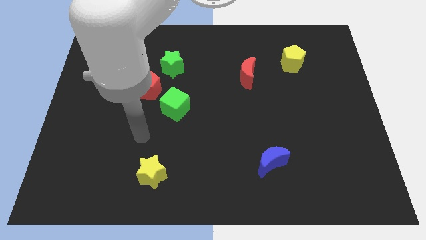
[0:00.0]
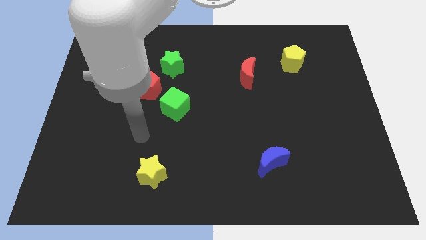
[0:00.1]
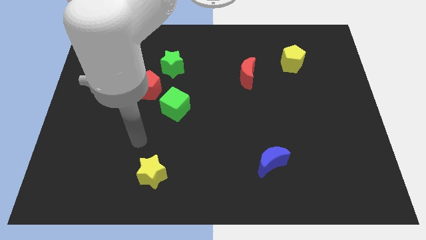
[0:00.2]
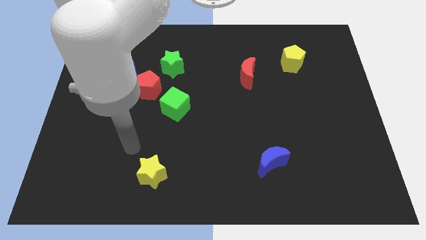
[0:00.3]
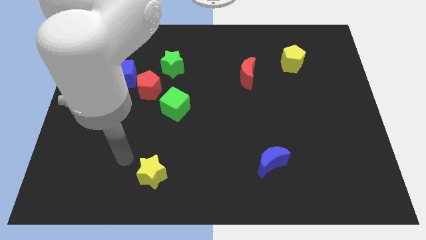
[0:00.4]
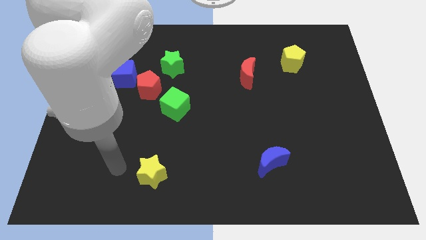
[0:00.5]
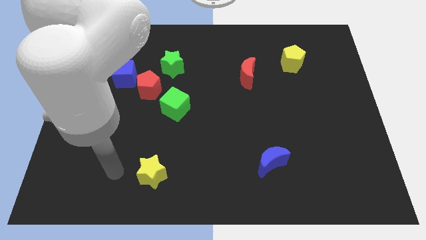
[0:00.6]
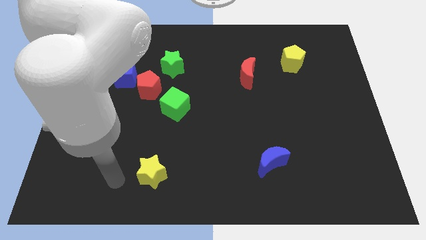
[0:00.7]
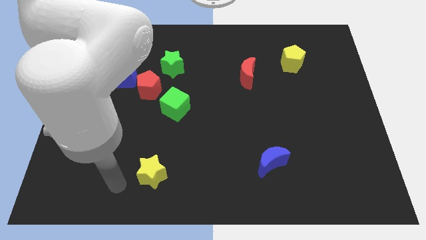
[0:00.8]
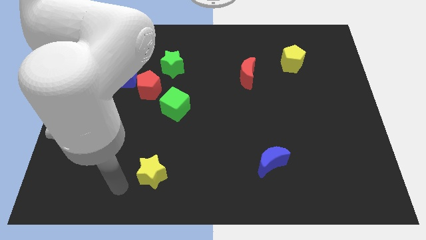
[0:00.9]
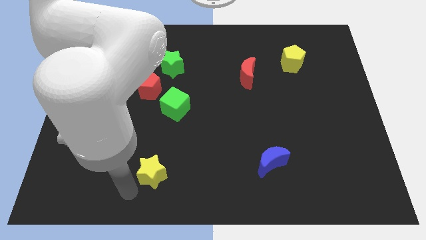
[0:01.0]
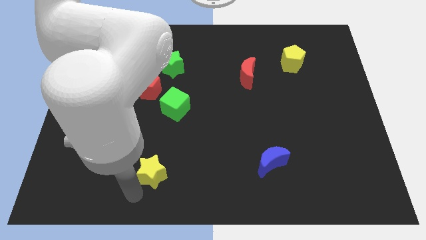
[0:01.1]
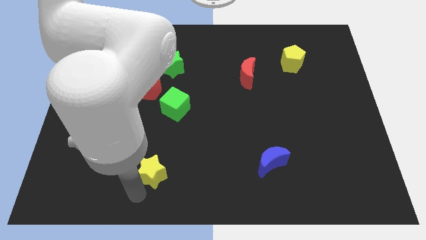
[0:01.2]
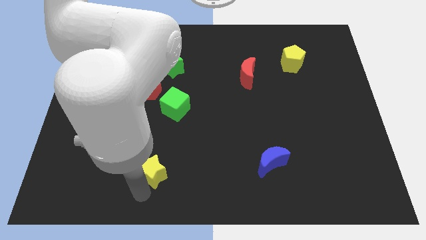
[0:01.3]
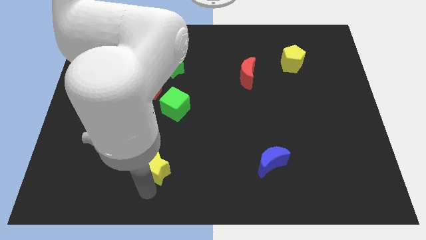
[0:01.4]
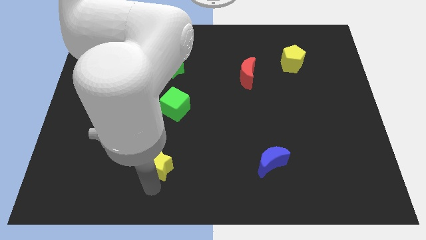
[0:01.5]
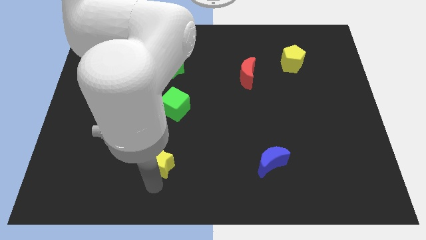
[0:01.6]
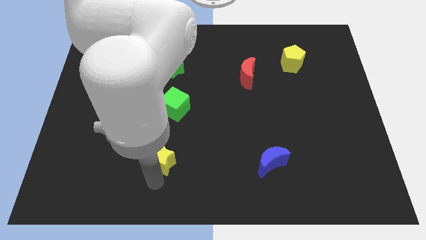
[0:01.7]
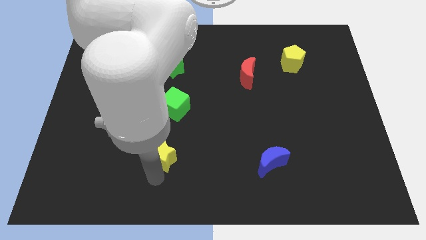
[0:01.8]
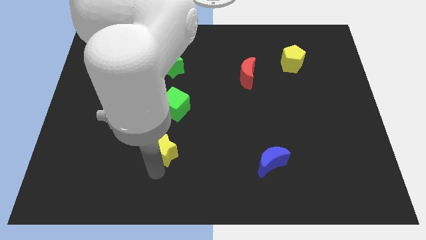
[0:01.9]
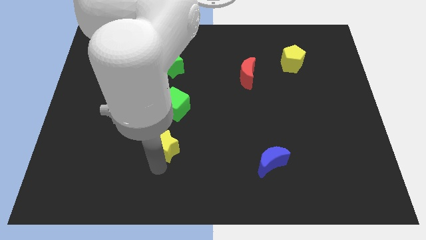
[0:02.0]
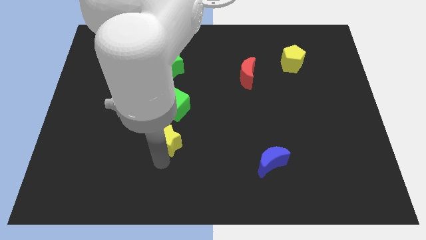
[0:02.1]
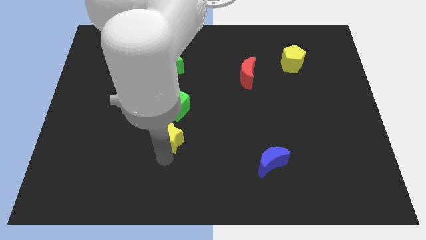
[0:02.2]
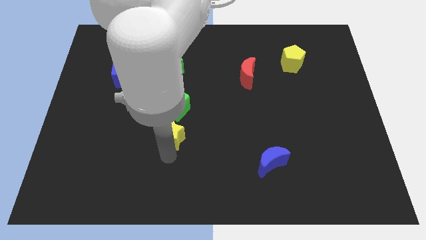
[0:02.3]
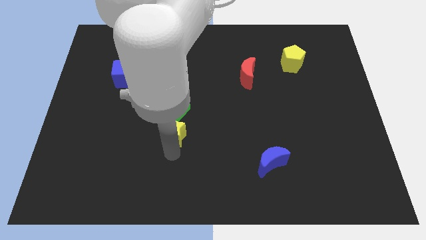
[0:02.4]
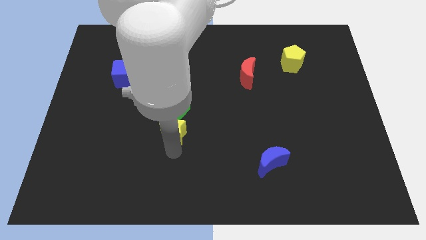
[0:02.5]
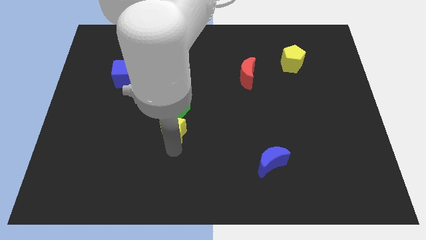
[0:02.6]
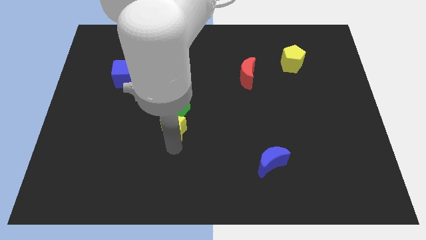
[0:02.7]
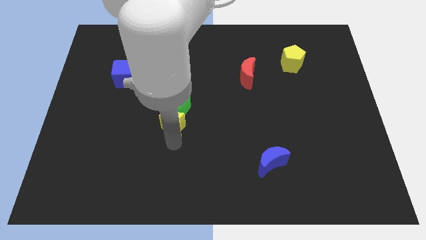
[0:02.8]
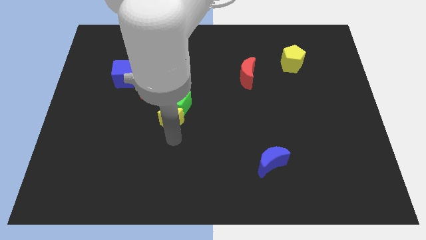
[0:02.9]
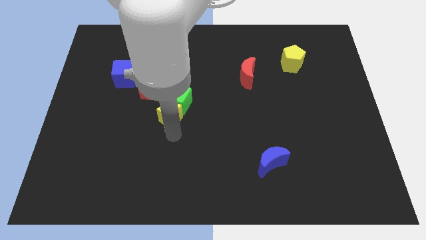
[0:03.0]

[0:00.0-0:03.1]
push the yellow star towards the green cube

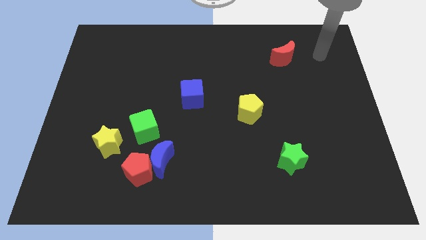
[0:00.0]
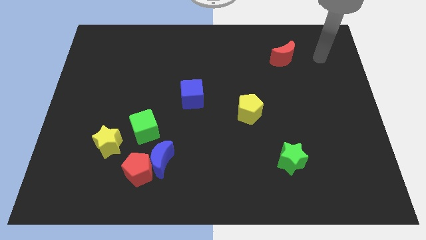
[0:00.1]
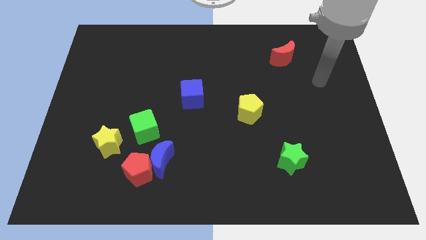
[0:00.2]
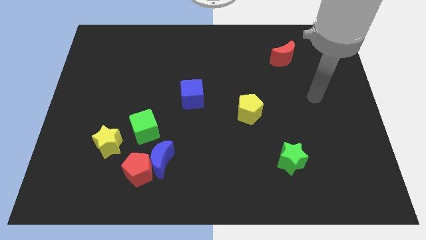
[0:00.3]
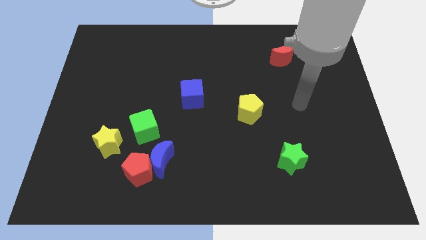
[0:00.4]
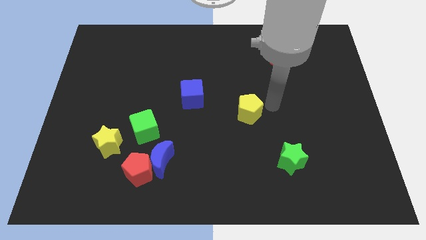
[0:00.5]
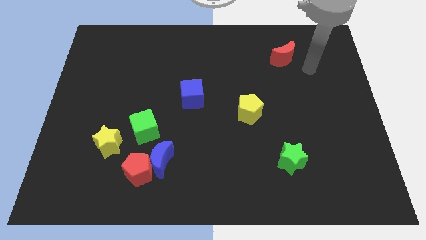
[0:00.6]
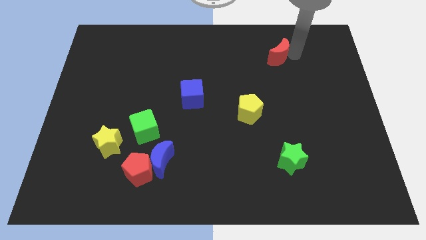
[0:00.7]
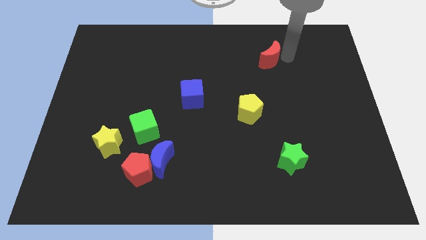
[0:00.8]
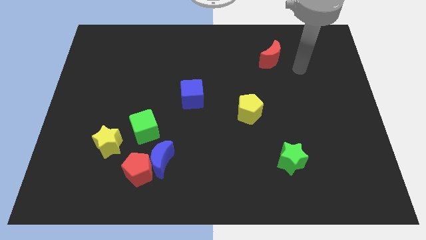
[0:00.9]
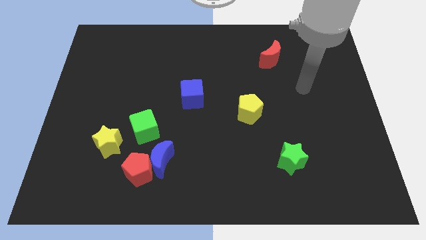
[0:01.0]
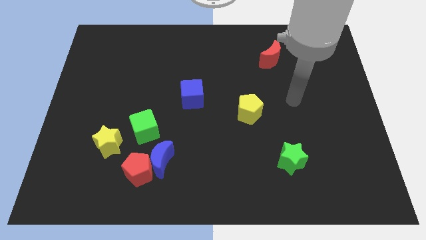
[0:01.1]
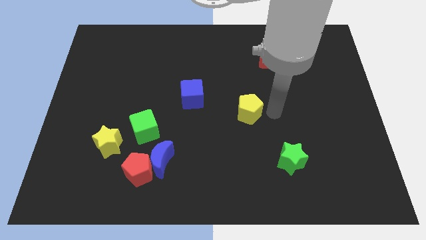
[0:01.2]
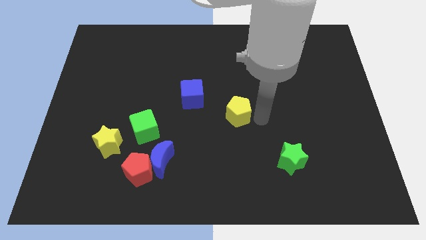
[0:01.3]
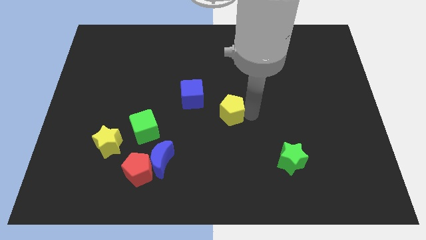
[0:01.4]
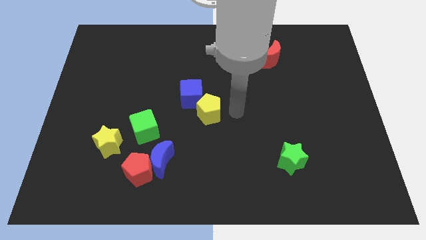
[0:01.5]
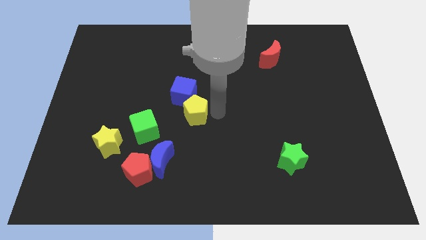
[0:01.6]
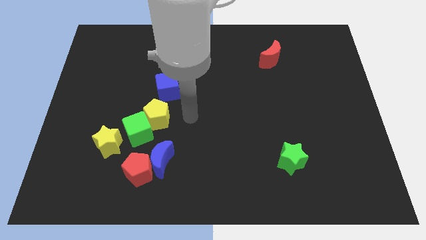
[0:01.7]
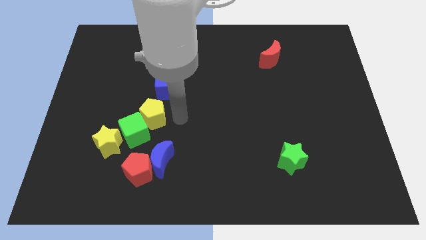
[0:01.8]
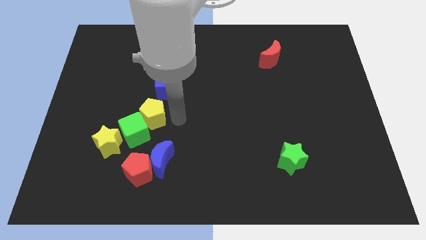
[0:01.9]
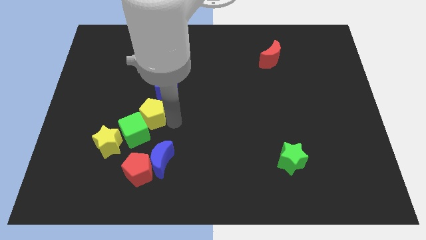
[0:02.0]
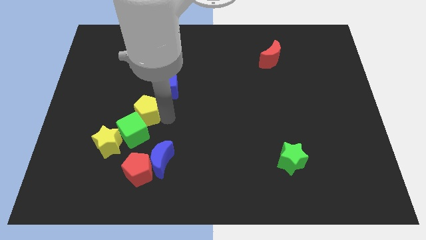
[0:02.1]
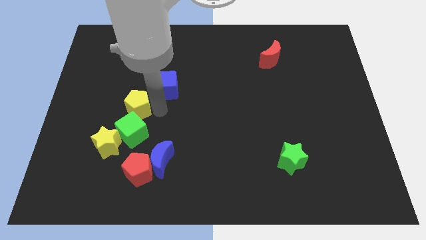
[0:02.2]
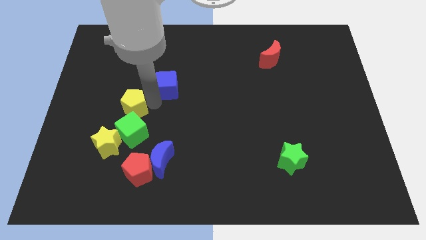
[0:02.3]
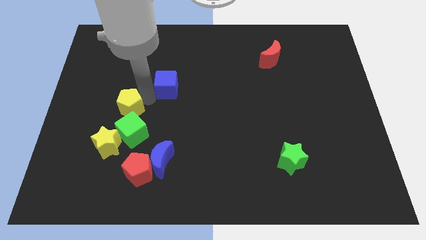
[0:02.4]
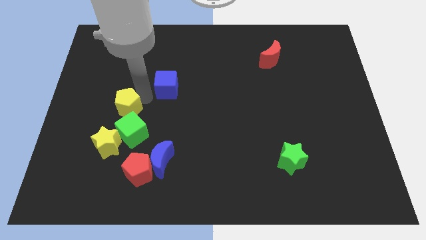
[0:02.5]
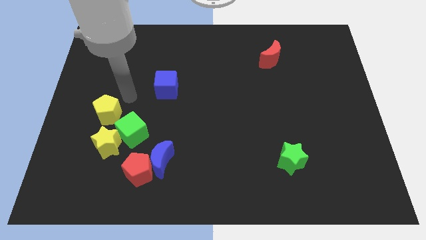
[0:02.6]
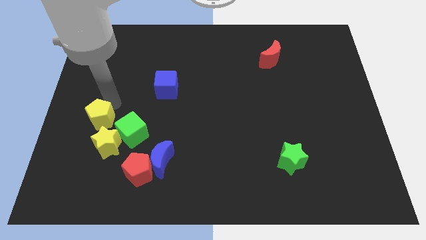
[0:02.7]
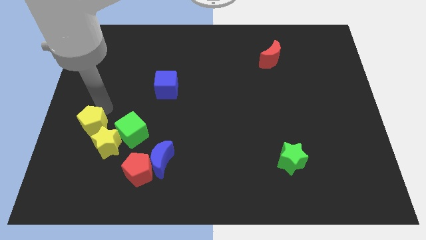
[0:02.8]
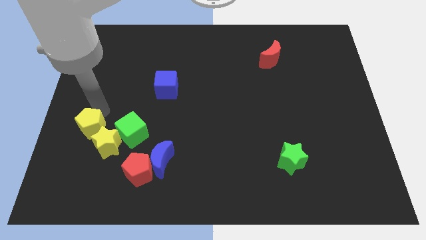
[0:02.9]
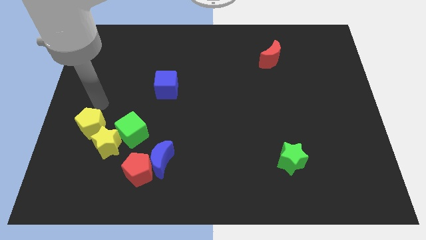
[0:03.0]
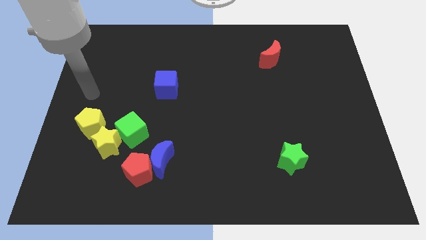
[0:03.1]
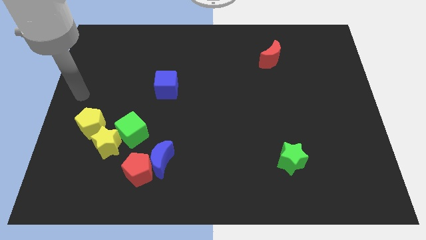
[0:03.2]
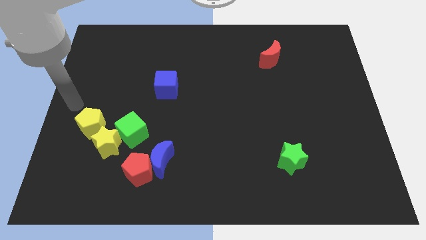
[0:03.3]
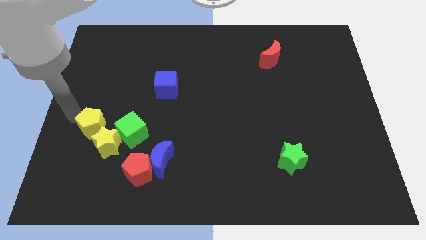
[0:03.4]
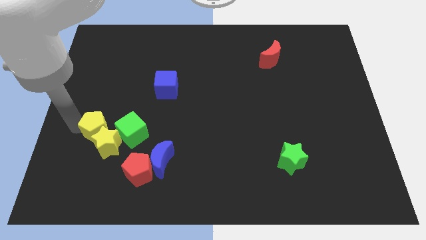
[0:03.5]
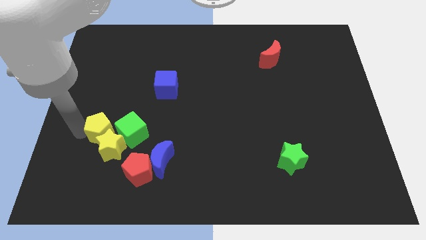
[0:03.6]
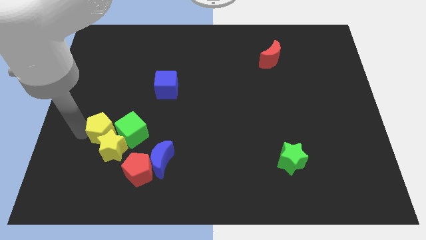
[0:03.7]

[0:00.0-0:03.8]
move the yellow pentagon towards the yellow star

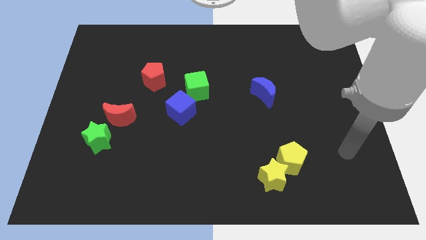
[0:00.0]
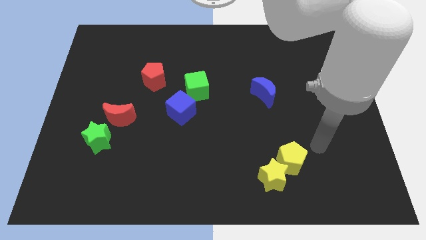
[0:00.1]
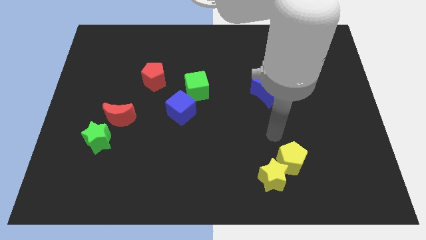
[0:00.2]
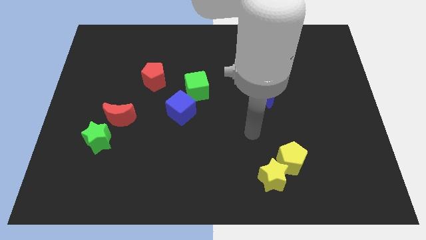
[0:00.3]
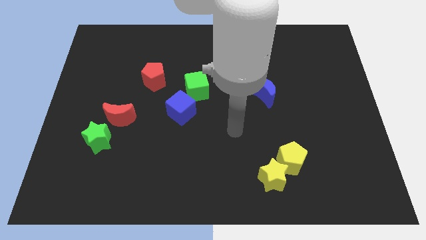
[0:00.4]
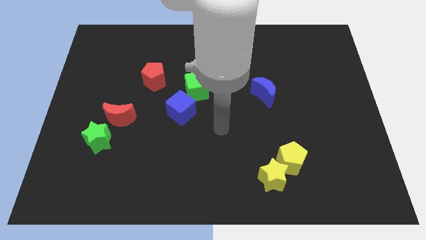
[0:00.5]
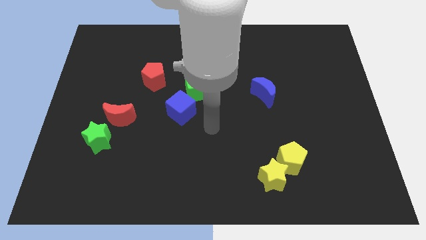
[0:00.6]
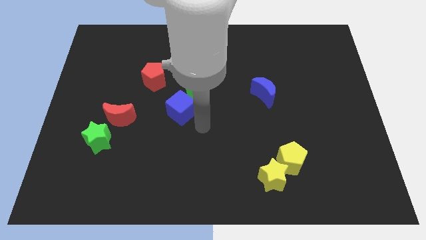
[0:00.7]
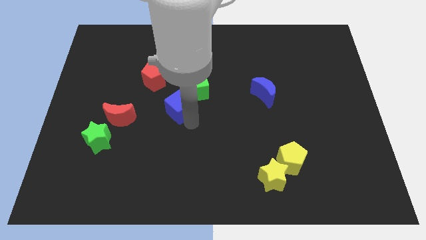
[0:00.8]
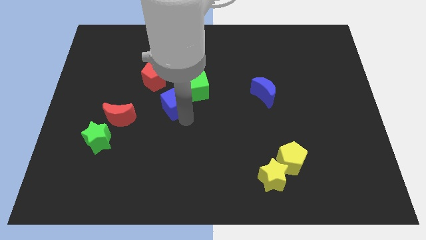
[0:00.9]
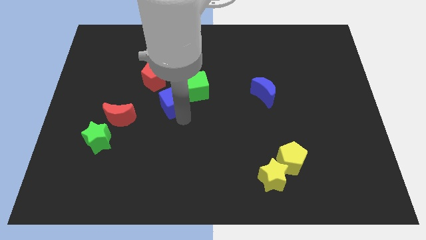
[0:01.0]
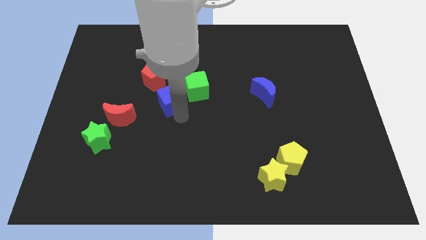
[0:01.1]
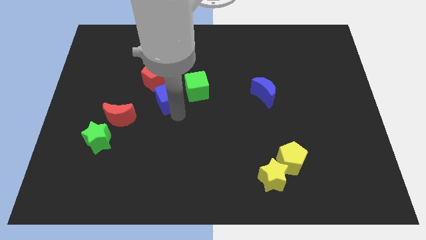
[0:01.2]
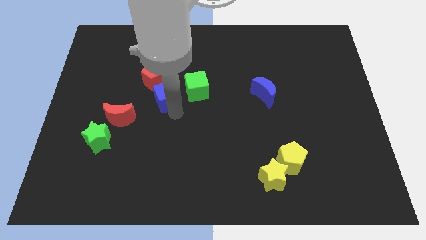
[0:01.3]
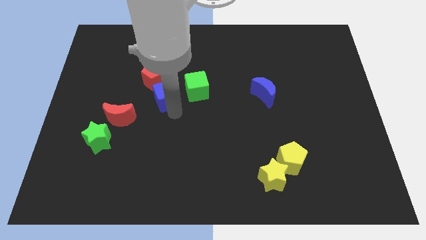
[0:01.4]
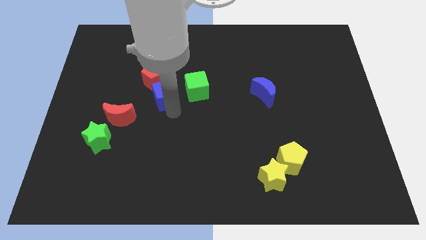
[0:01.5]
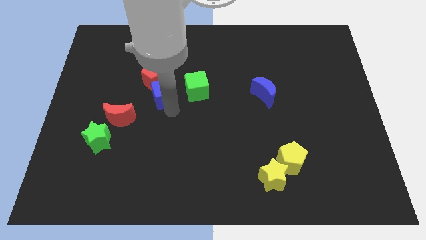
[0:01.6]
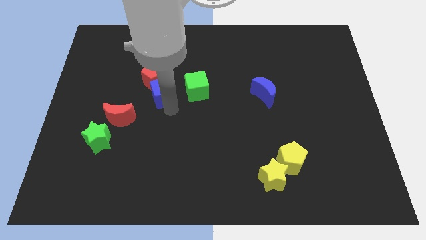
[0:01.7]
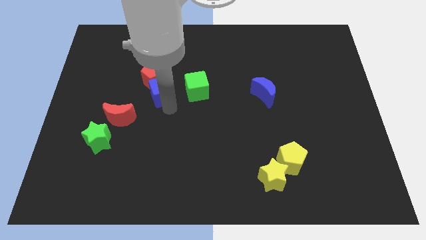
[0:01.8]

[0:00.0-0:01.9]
put the blue cube close to the red pentagon
